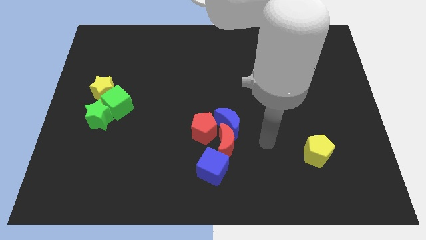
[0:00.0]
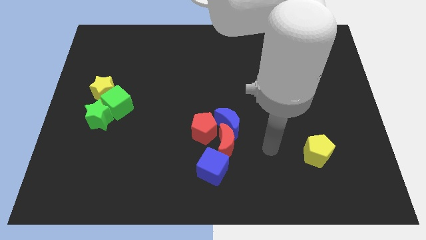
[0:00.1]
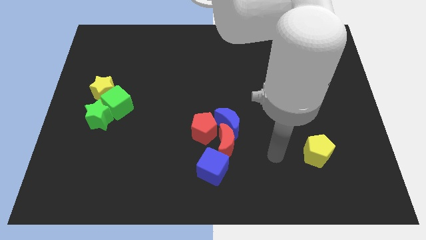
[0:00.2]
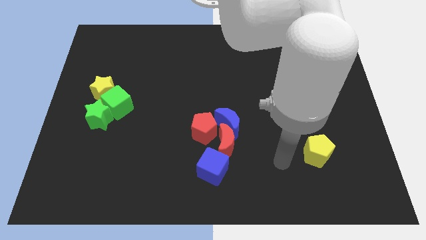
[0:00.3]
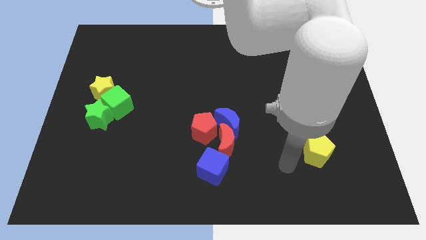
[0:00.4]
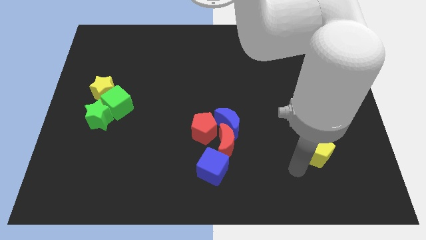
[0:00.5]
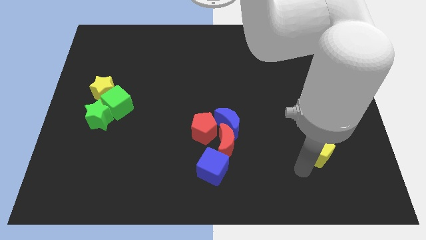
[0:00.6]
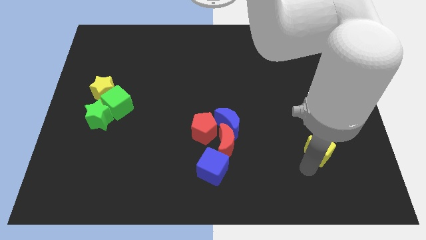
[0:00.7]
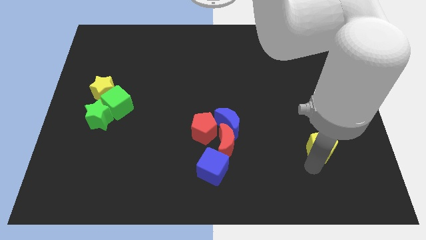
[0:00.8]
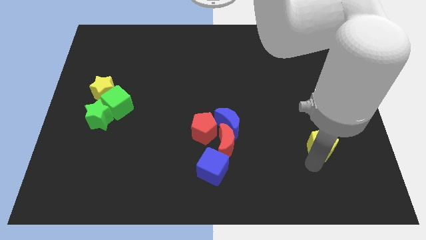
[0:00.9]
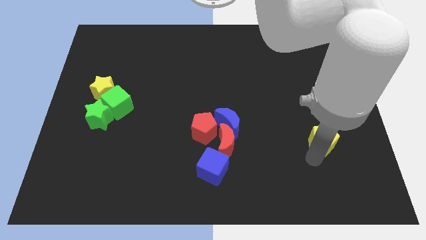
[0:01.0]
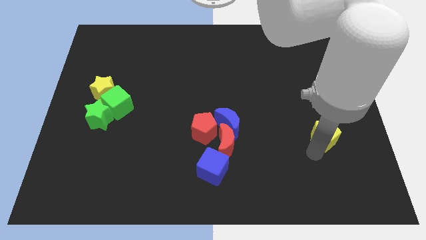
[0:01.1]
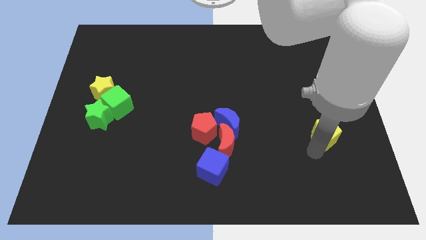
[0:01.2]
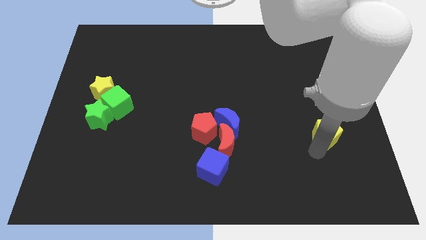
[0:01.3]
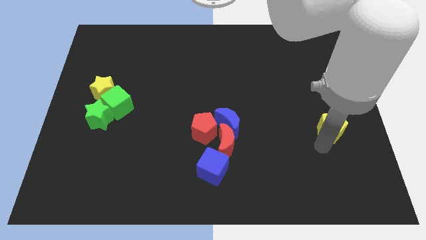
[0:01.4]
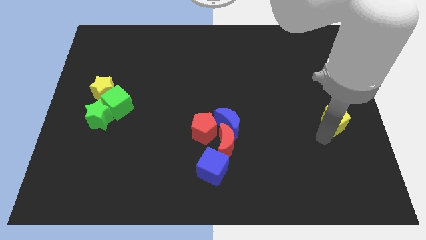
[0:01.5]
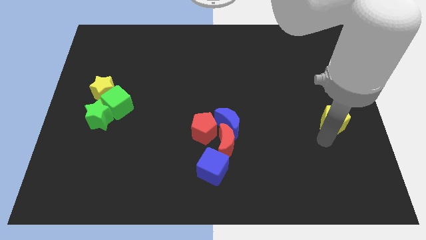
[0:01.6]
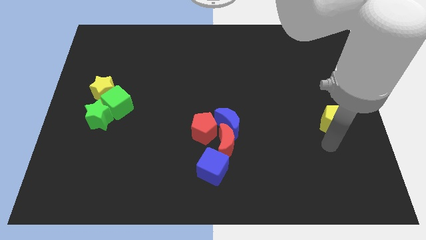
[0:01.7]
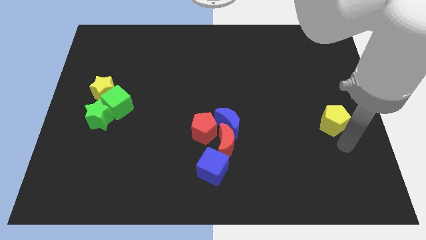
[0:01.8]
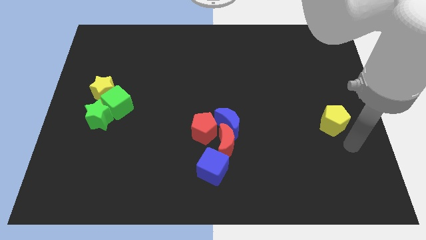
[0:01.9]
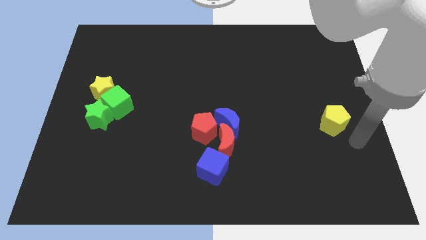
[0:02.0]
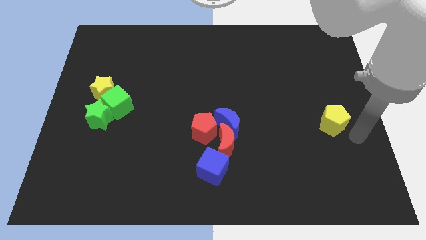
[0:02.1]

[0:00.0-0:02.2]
move the yellow pentagon at the right side center of the board

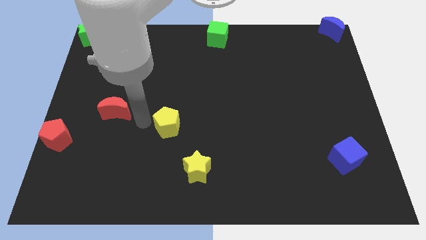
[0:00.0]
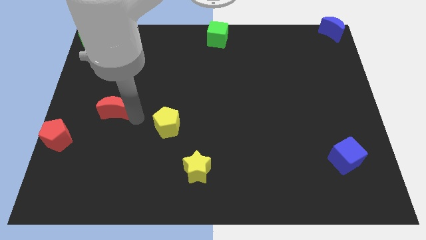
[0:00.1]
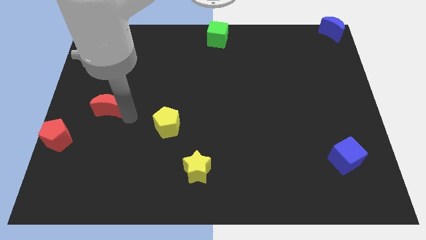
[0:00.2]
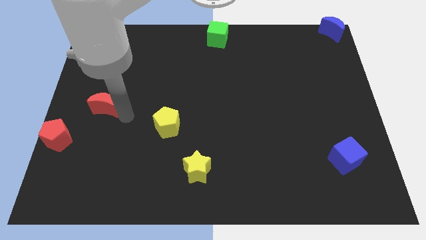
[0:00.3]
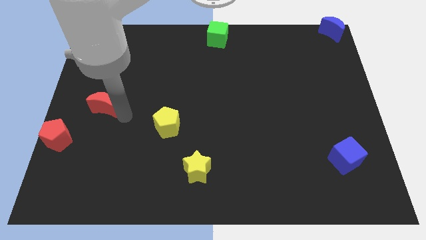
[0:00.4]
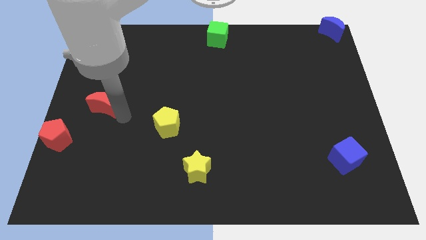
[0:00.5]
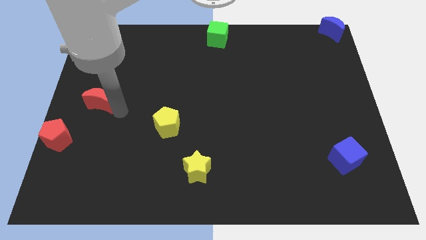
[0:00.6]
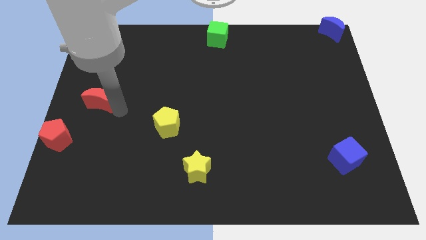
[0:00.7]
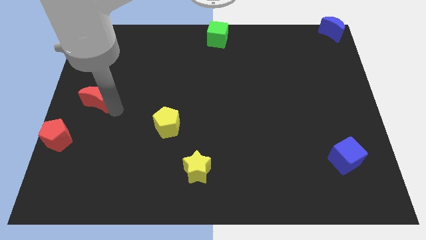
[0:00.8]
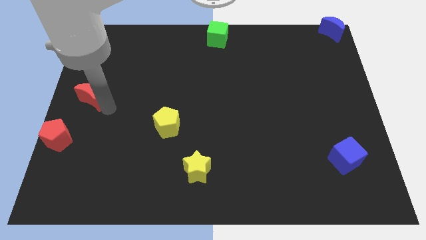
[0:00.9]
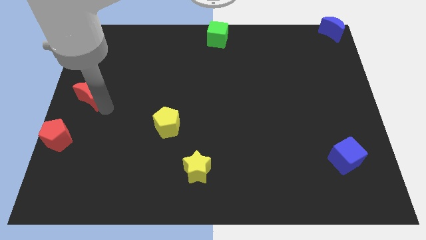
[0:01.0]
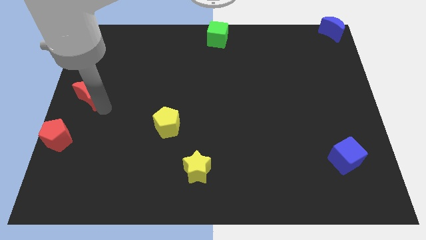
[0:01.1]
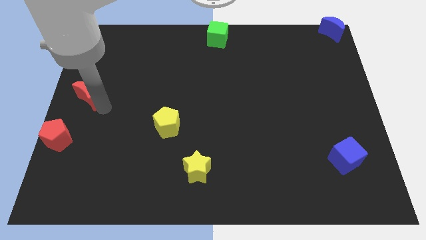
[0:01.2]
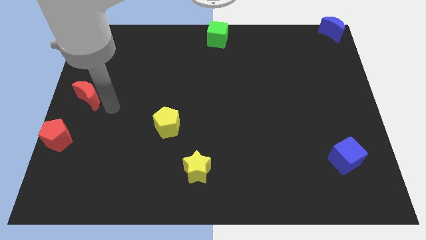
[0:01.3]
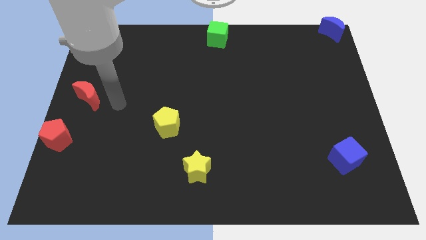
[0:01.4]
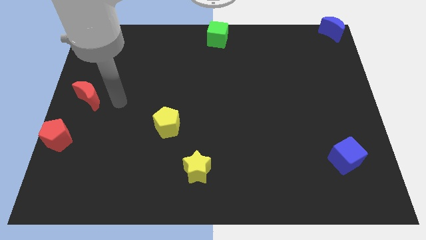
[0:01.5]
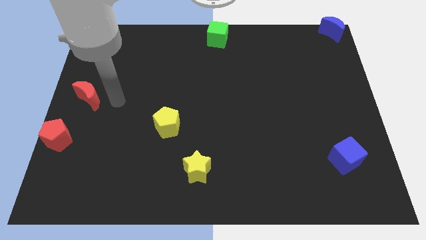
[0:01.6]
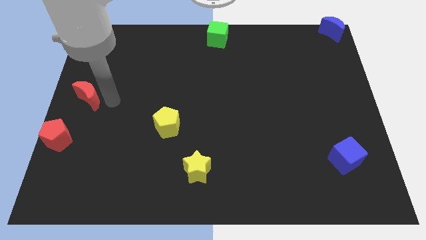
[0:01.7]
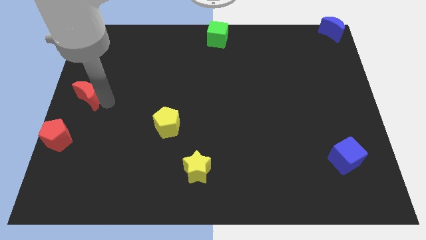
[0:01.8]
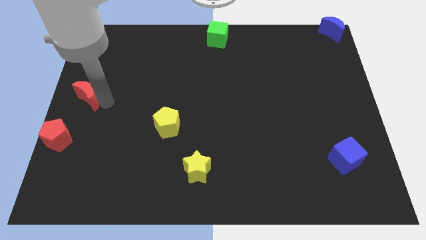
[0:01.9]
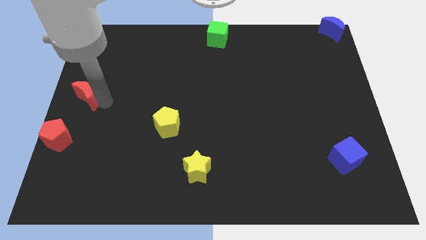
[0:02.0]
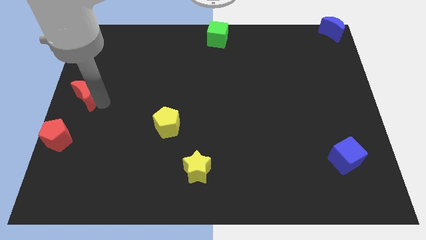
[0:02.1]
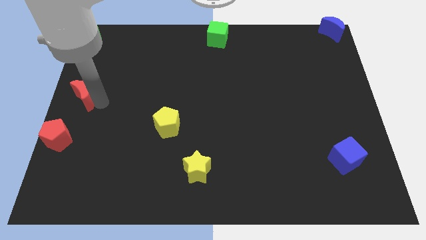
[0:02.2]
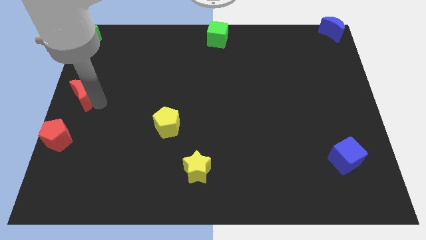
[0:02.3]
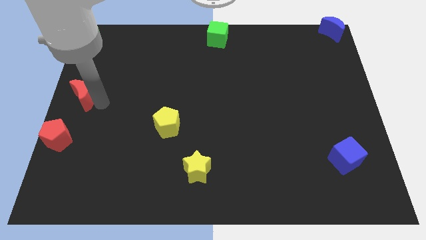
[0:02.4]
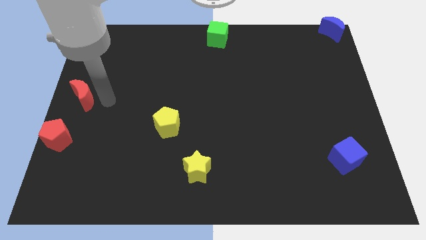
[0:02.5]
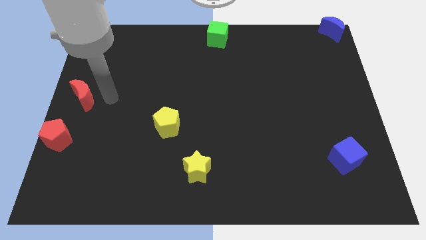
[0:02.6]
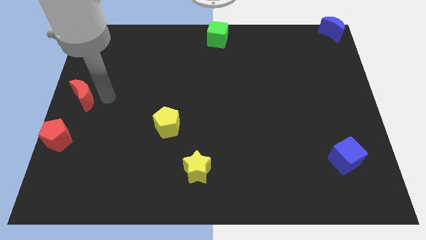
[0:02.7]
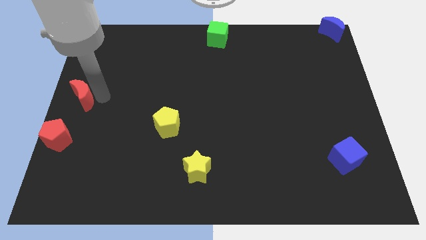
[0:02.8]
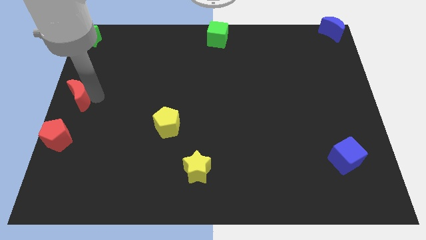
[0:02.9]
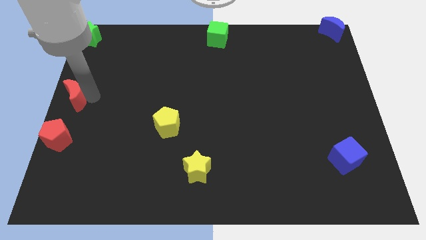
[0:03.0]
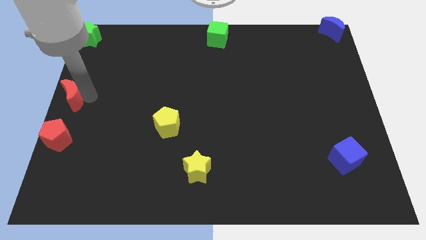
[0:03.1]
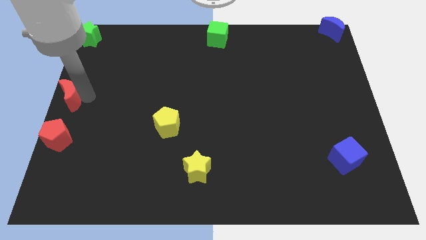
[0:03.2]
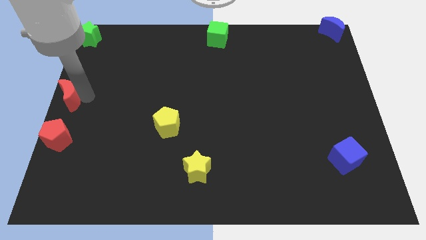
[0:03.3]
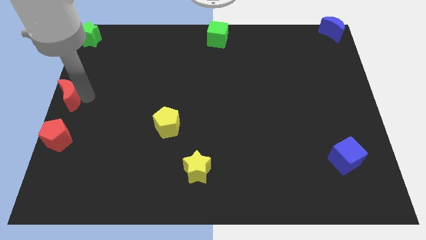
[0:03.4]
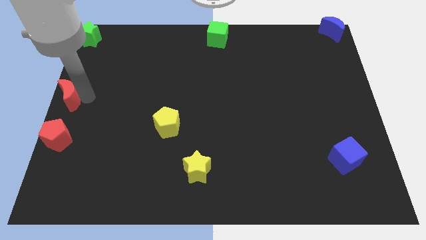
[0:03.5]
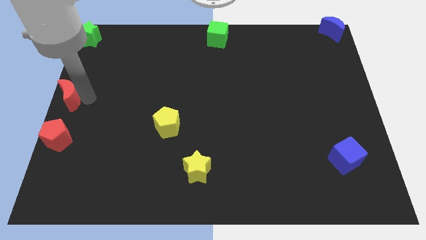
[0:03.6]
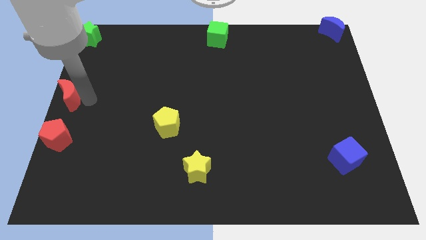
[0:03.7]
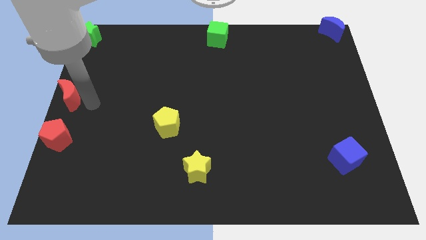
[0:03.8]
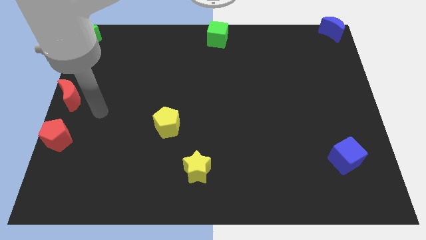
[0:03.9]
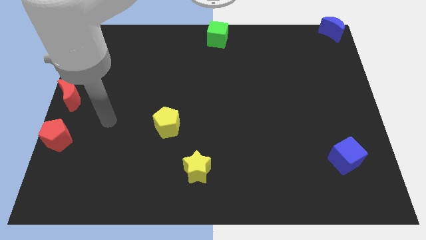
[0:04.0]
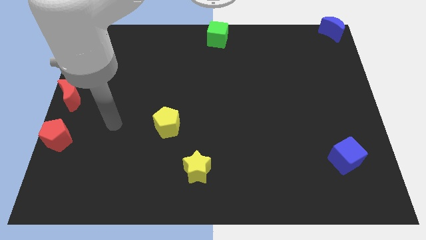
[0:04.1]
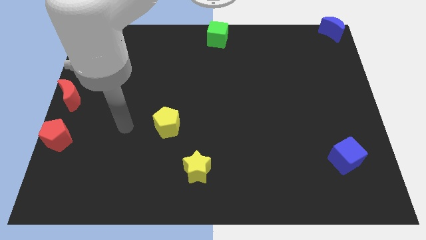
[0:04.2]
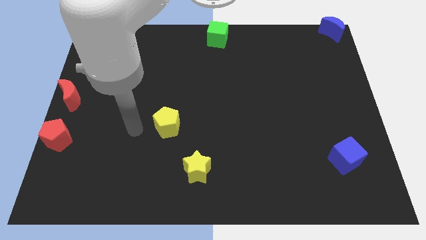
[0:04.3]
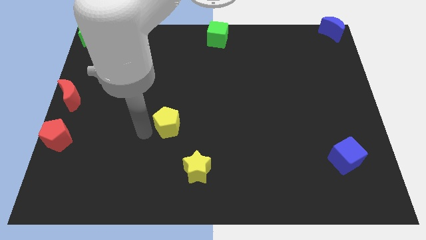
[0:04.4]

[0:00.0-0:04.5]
place the red moon above the red pentagon

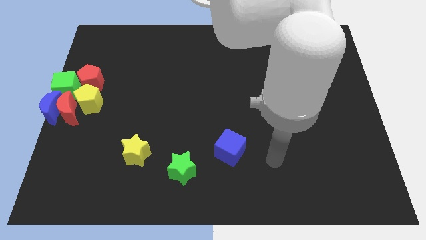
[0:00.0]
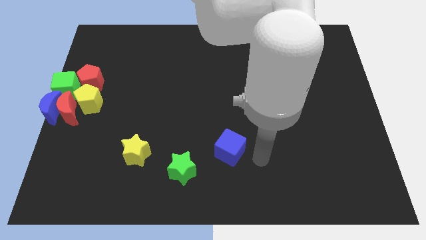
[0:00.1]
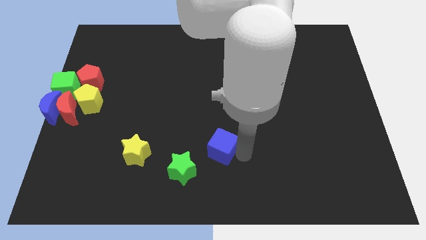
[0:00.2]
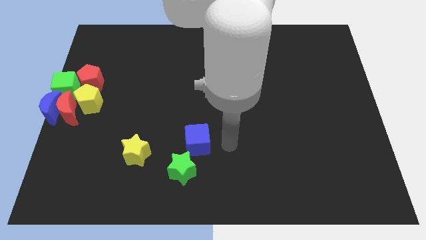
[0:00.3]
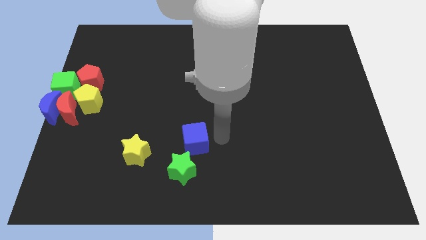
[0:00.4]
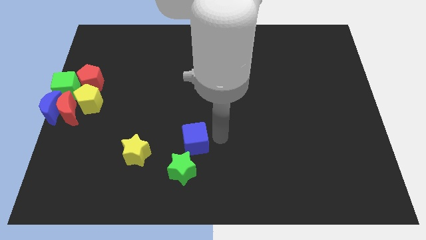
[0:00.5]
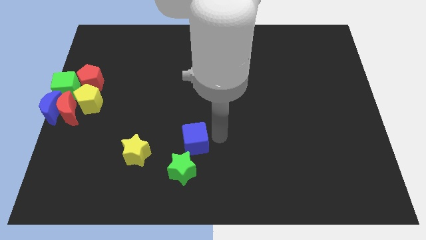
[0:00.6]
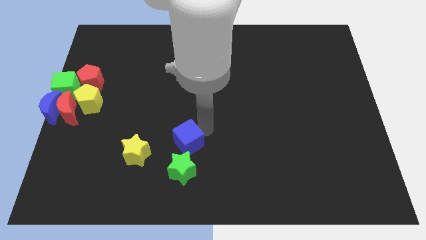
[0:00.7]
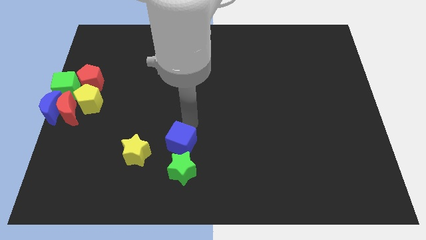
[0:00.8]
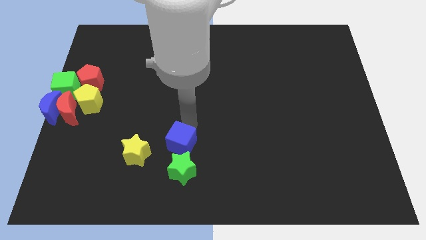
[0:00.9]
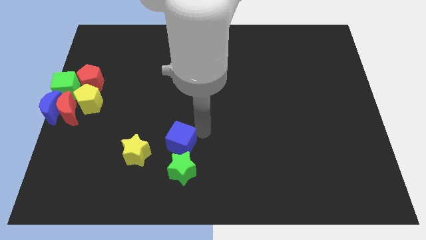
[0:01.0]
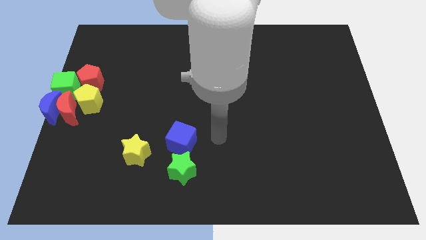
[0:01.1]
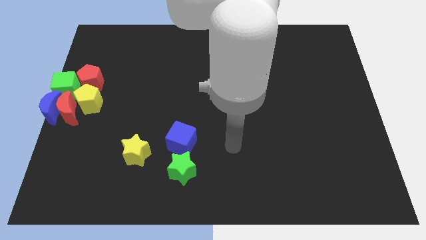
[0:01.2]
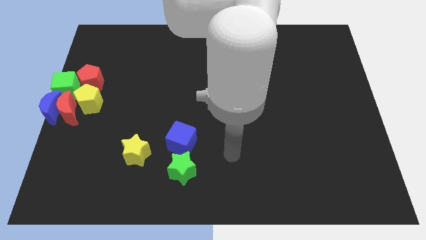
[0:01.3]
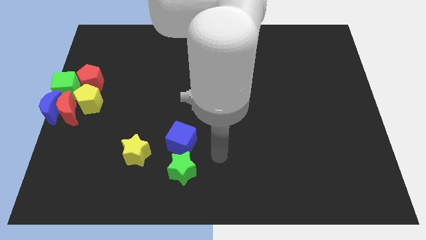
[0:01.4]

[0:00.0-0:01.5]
make a triangle by moving the blue cube

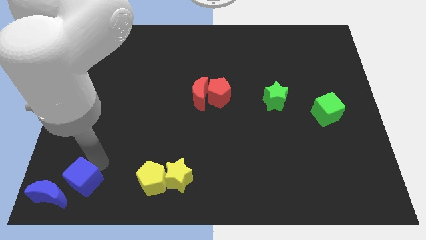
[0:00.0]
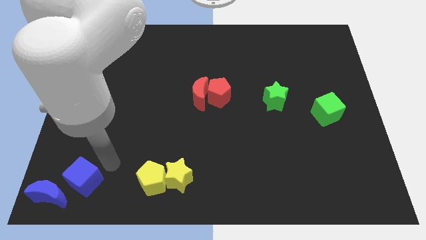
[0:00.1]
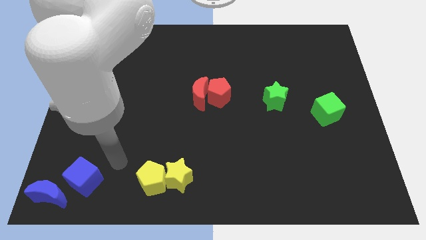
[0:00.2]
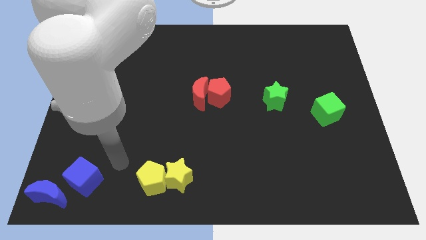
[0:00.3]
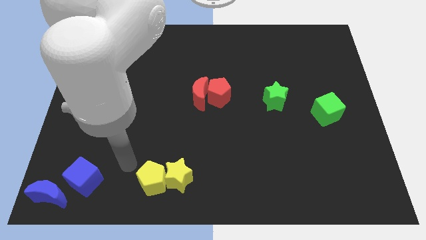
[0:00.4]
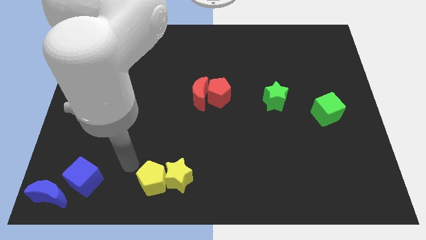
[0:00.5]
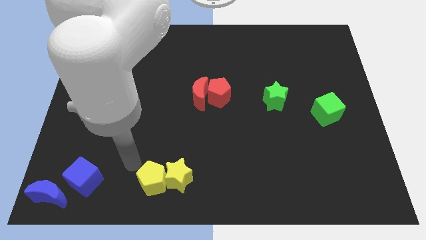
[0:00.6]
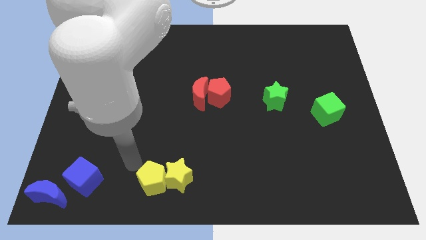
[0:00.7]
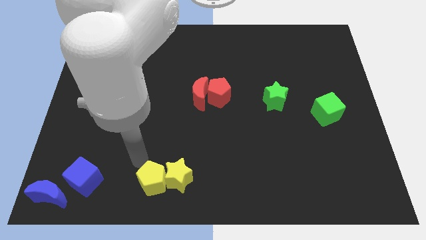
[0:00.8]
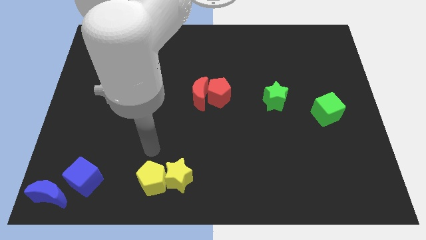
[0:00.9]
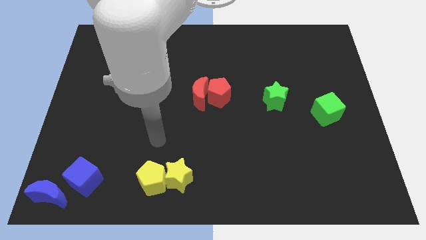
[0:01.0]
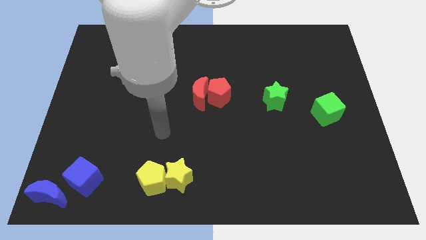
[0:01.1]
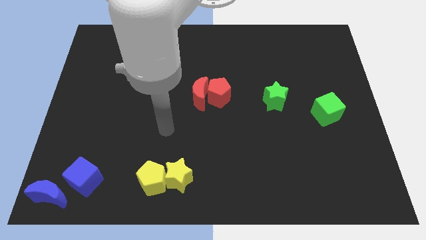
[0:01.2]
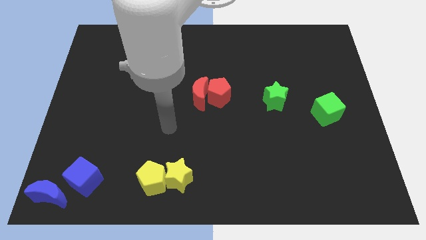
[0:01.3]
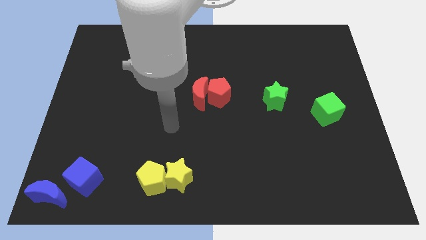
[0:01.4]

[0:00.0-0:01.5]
place your hand above the yellow blocks
